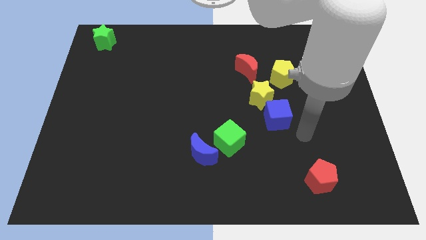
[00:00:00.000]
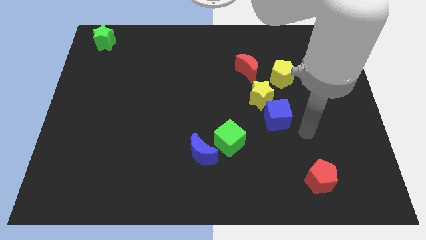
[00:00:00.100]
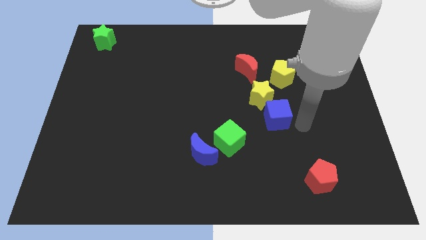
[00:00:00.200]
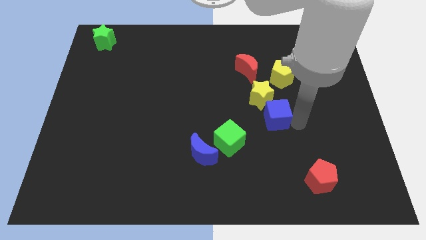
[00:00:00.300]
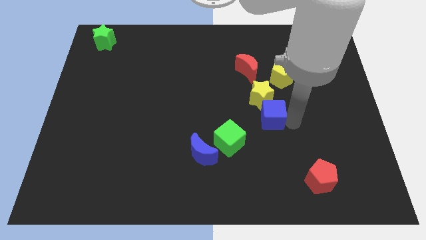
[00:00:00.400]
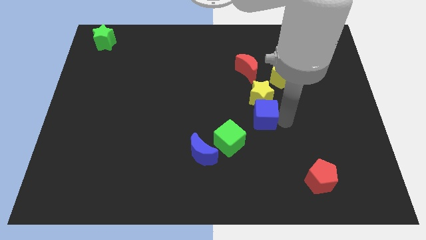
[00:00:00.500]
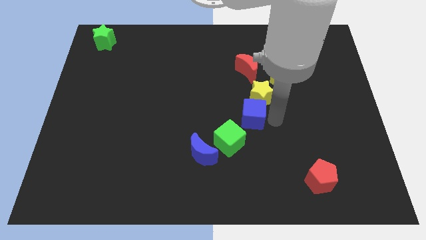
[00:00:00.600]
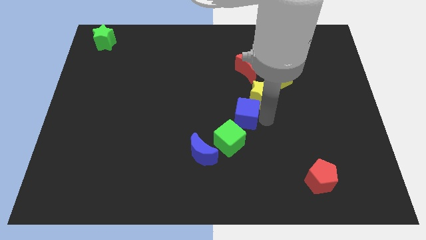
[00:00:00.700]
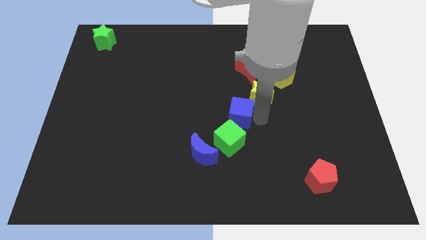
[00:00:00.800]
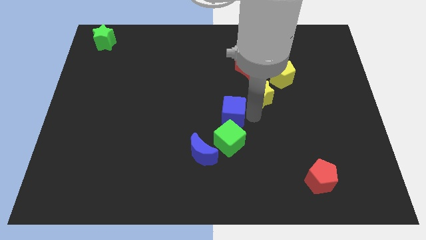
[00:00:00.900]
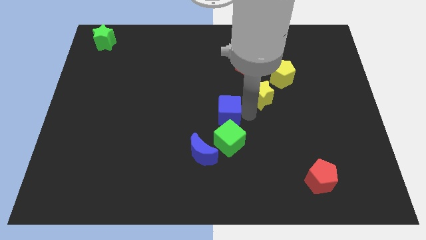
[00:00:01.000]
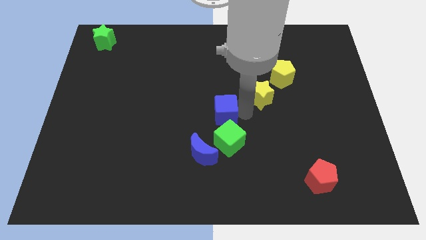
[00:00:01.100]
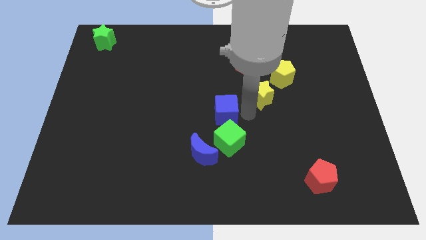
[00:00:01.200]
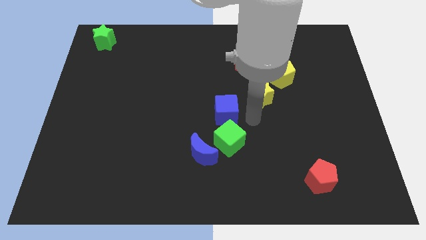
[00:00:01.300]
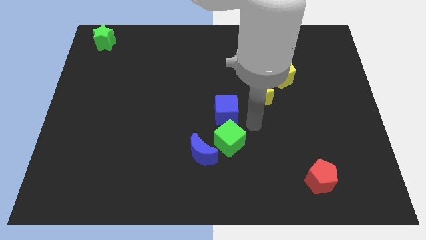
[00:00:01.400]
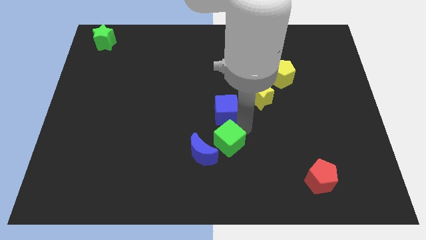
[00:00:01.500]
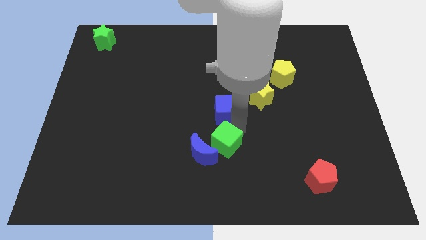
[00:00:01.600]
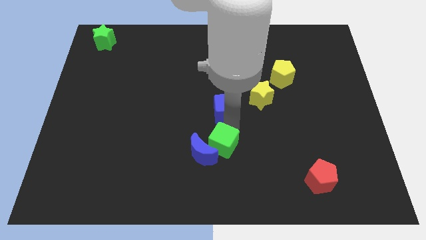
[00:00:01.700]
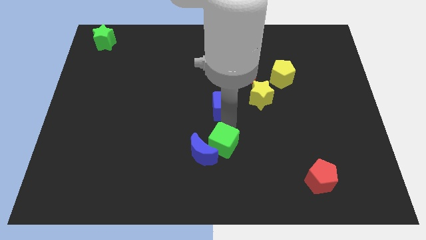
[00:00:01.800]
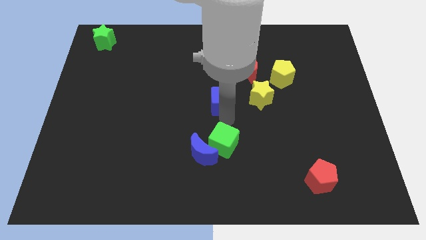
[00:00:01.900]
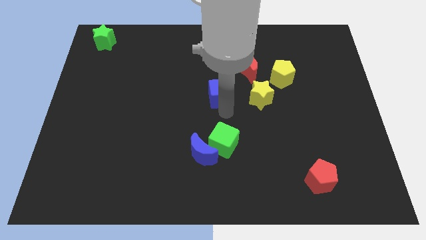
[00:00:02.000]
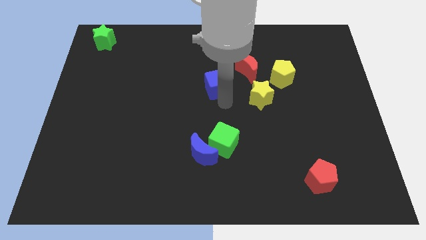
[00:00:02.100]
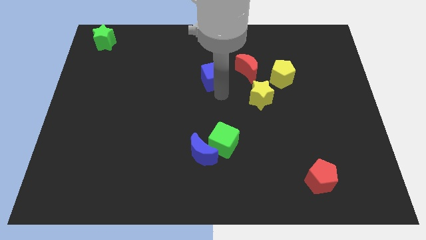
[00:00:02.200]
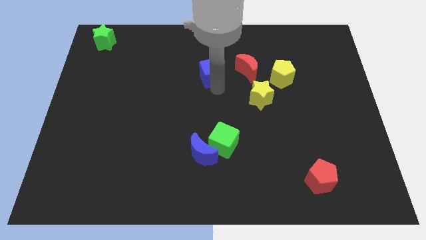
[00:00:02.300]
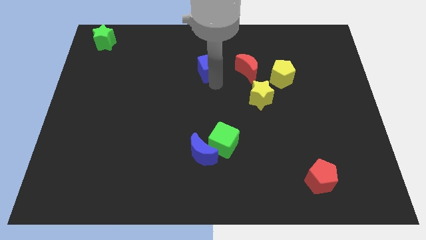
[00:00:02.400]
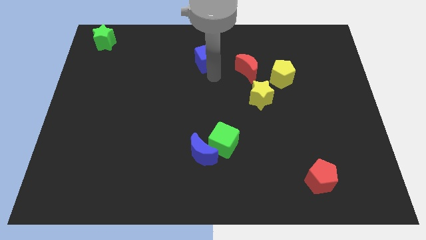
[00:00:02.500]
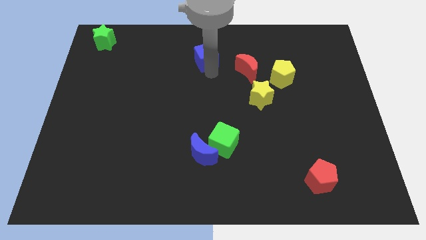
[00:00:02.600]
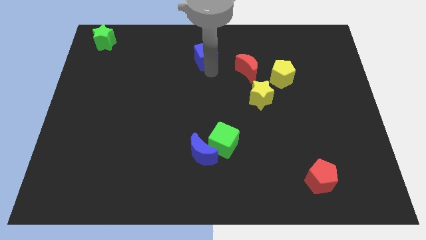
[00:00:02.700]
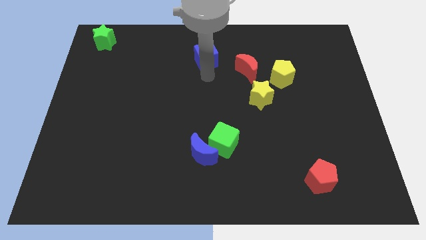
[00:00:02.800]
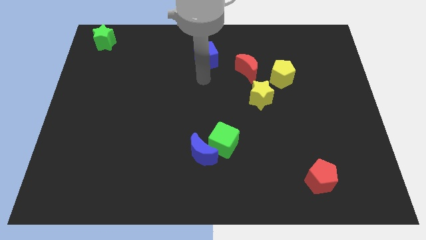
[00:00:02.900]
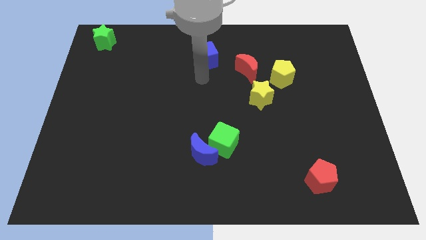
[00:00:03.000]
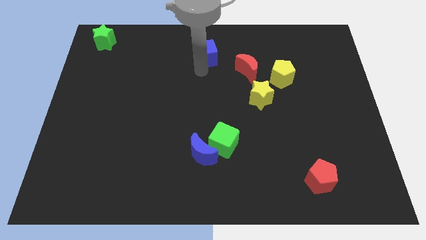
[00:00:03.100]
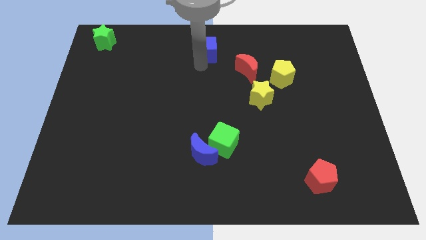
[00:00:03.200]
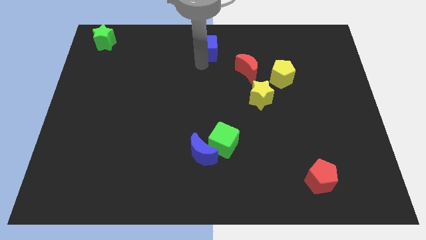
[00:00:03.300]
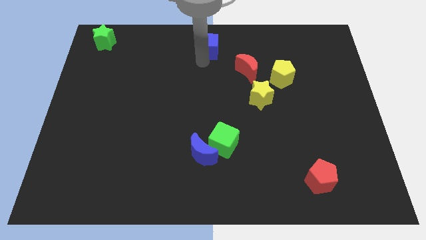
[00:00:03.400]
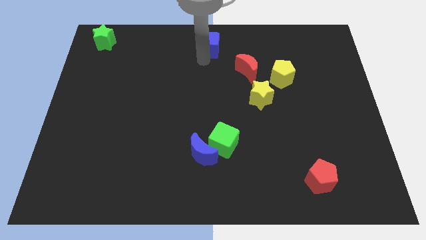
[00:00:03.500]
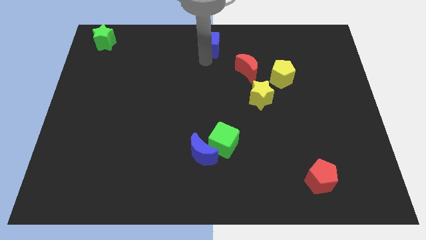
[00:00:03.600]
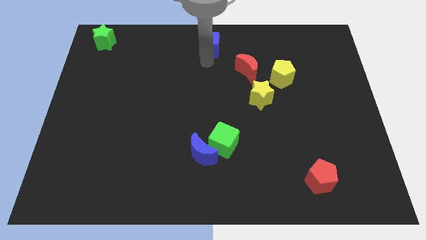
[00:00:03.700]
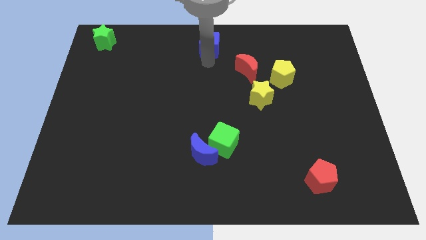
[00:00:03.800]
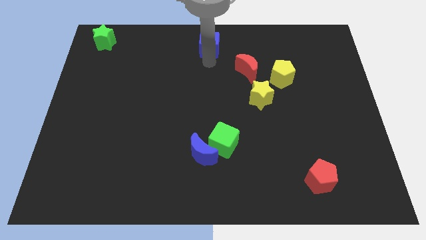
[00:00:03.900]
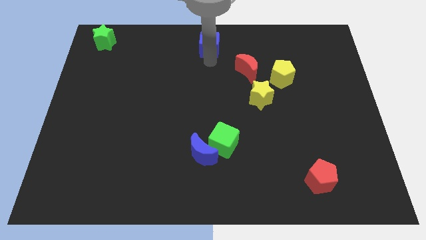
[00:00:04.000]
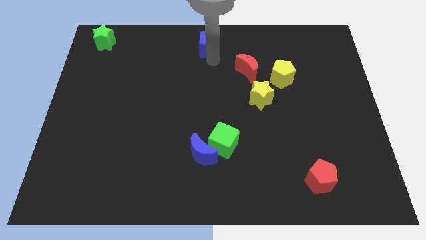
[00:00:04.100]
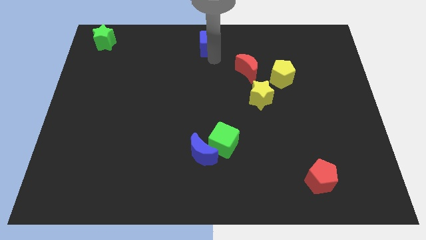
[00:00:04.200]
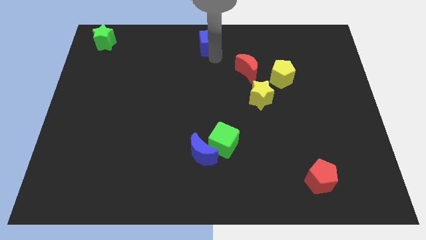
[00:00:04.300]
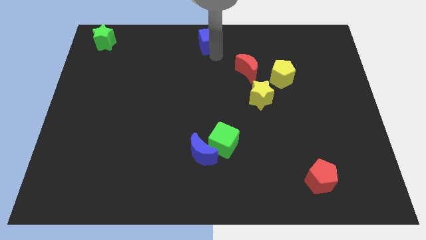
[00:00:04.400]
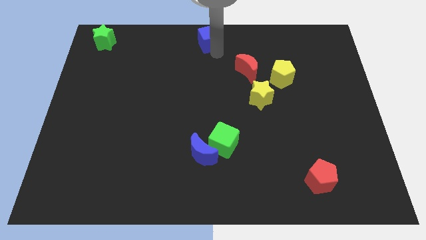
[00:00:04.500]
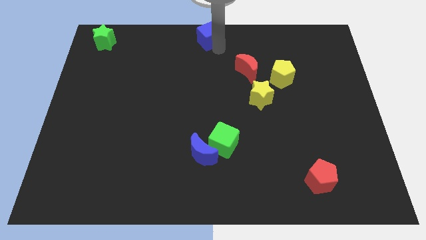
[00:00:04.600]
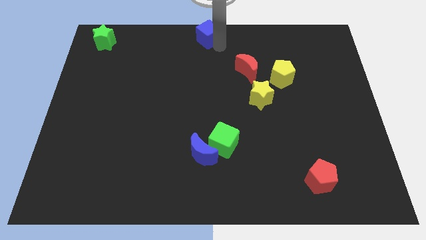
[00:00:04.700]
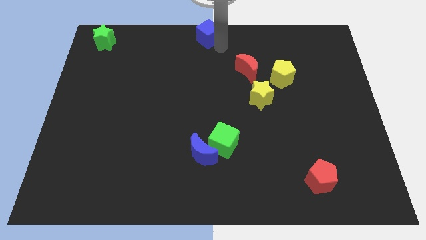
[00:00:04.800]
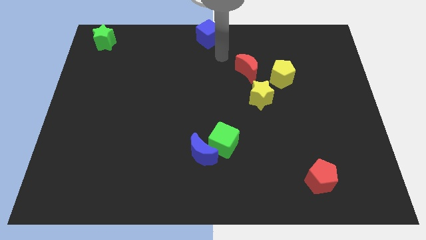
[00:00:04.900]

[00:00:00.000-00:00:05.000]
push the blue cube to the center top of the board

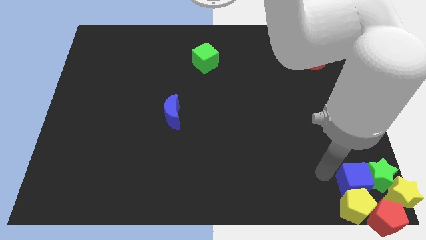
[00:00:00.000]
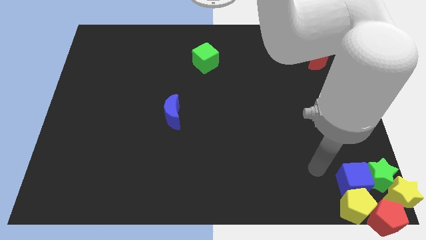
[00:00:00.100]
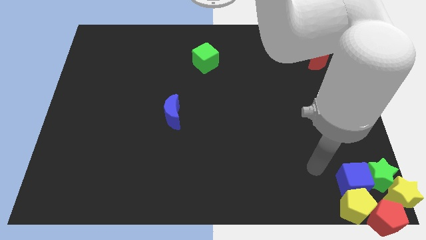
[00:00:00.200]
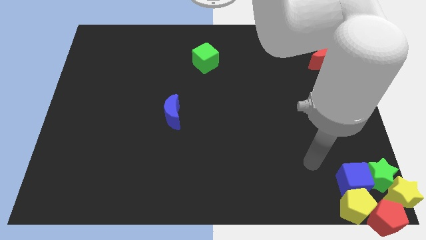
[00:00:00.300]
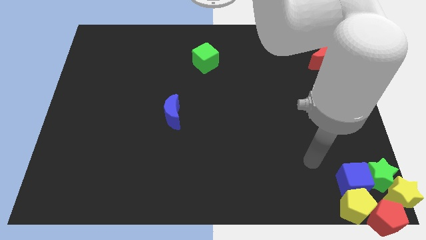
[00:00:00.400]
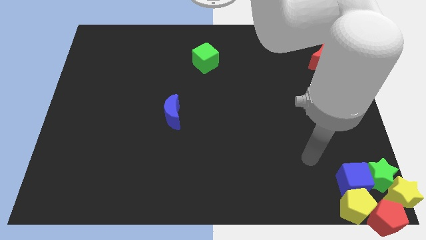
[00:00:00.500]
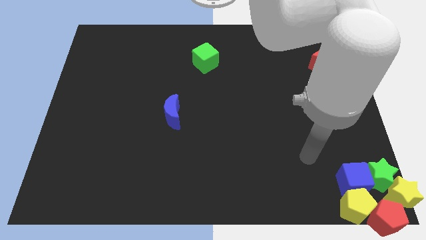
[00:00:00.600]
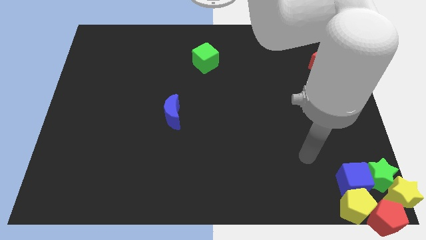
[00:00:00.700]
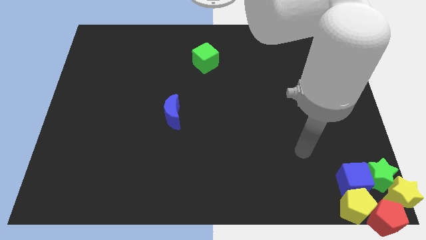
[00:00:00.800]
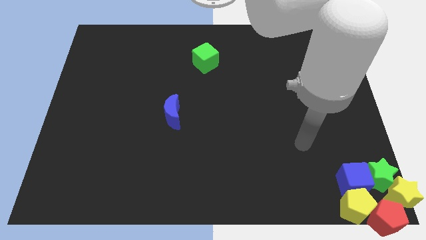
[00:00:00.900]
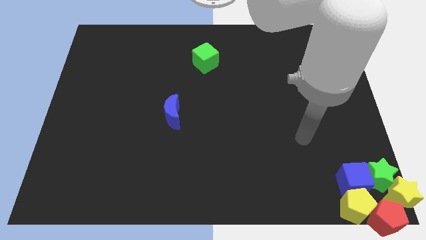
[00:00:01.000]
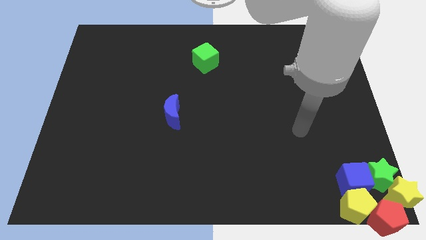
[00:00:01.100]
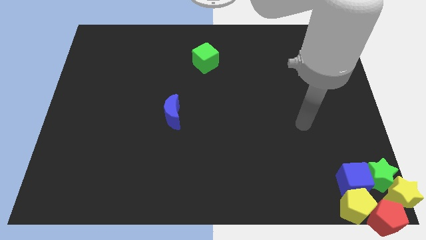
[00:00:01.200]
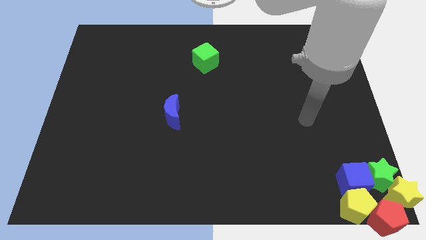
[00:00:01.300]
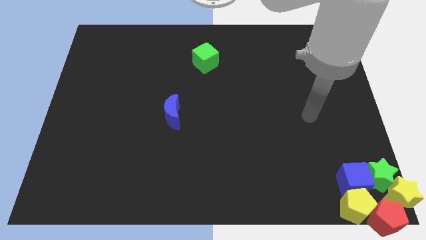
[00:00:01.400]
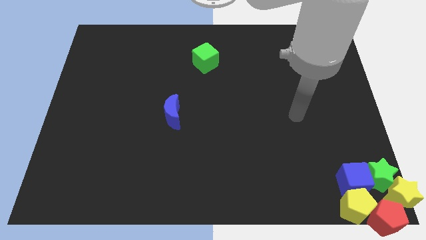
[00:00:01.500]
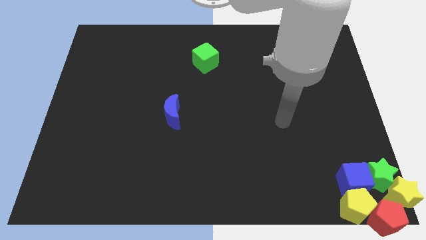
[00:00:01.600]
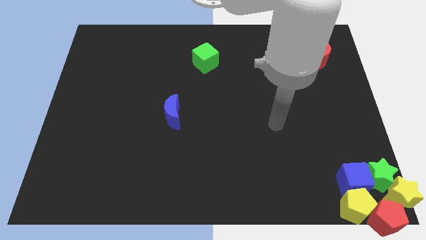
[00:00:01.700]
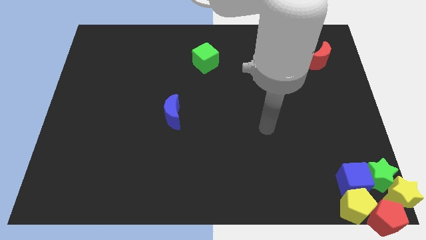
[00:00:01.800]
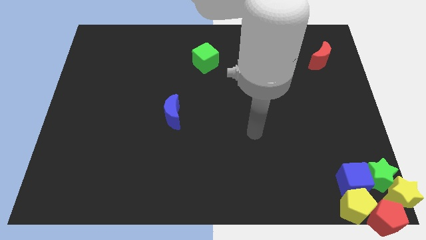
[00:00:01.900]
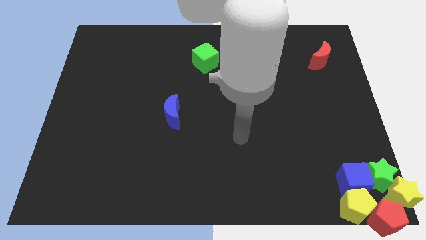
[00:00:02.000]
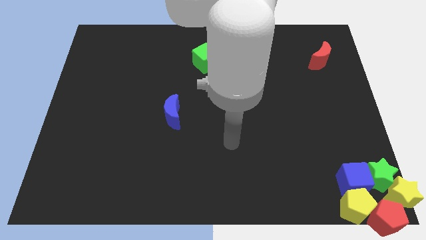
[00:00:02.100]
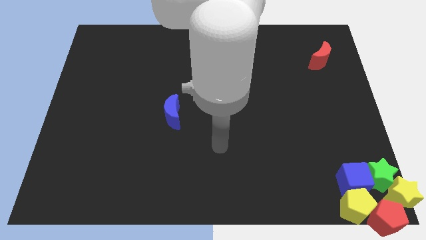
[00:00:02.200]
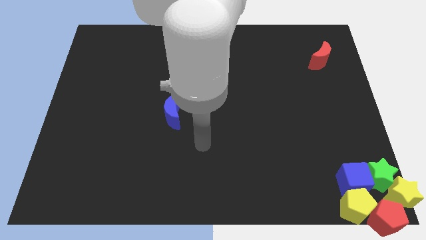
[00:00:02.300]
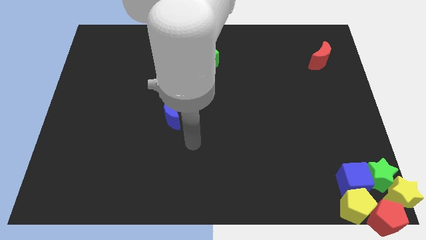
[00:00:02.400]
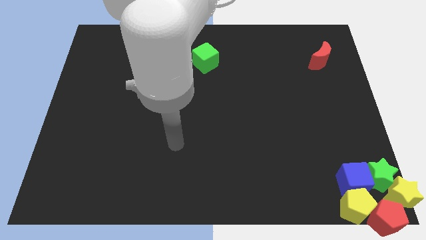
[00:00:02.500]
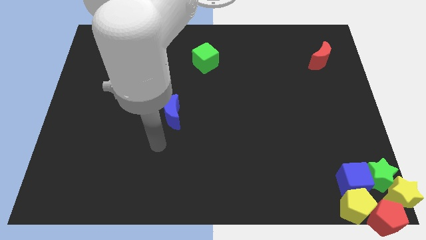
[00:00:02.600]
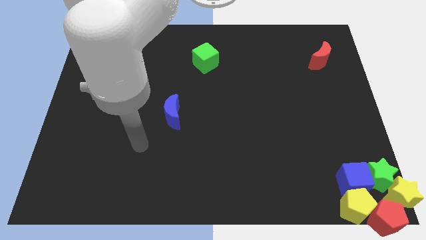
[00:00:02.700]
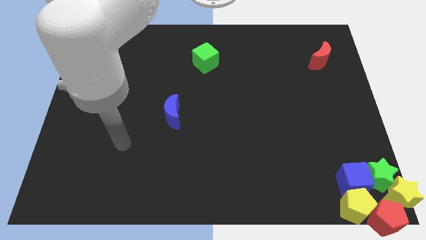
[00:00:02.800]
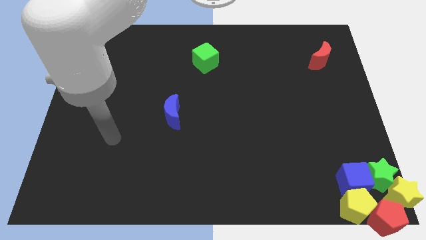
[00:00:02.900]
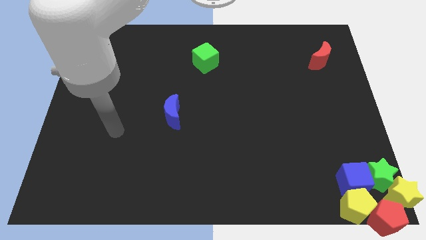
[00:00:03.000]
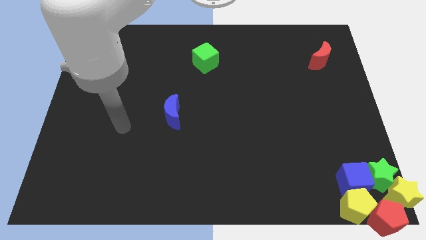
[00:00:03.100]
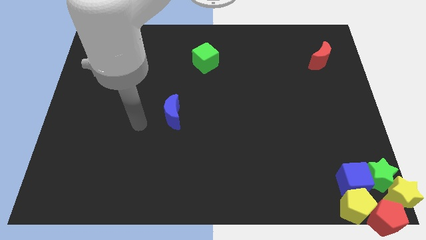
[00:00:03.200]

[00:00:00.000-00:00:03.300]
go away from the group of blocks

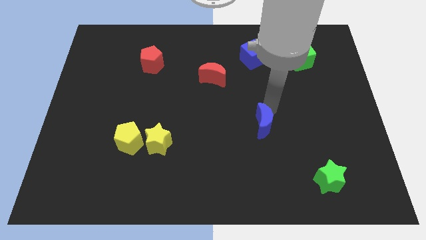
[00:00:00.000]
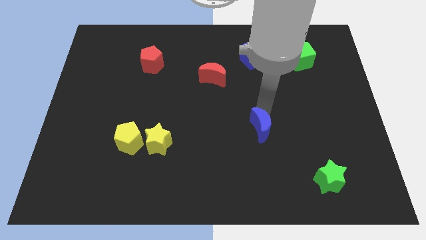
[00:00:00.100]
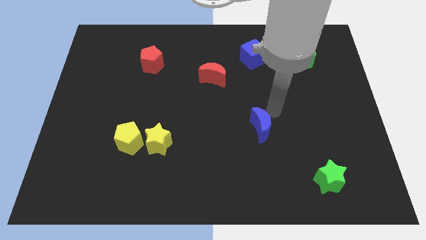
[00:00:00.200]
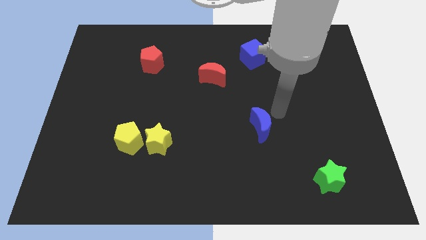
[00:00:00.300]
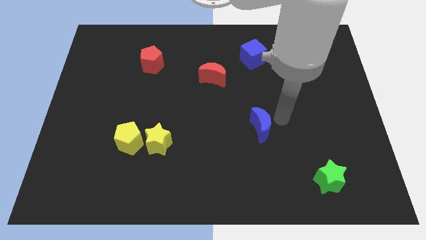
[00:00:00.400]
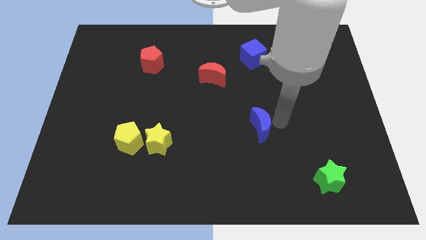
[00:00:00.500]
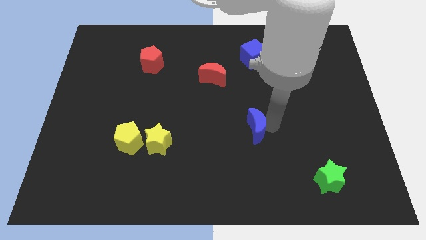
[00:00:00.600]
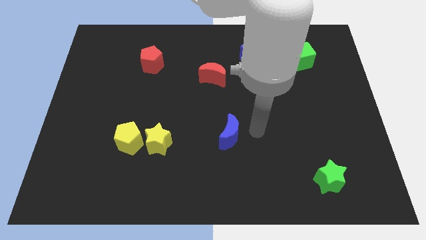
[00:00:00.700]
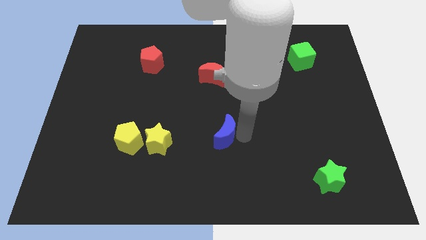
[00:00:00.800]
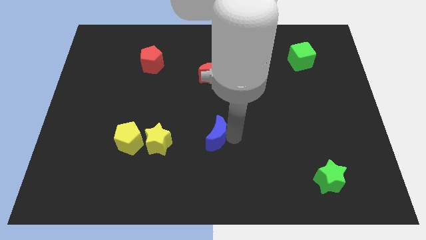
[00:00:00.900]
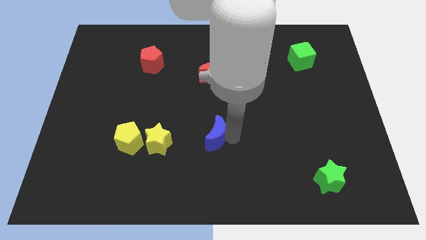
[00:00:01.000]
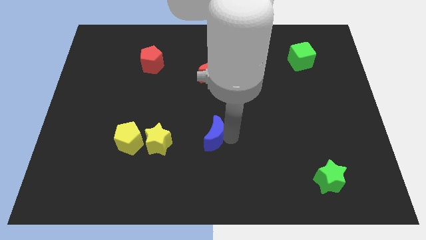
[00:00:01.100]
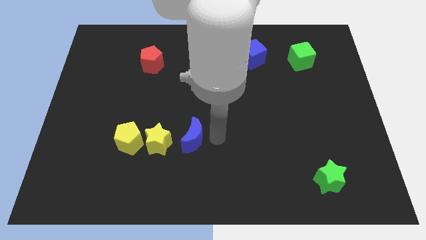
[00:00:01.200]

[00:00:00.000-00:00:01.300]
move the blue crescent to the bottom of the red crescent
